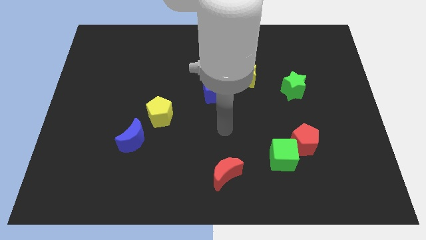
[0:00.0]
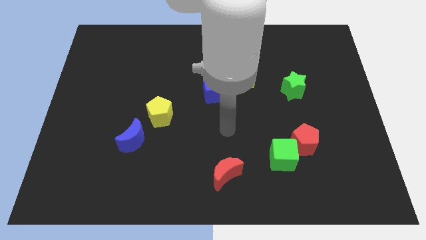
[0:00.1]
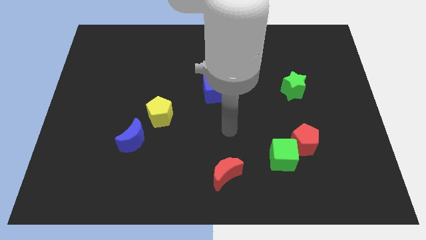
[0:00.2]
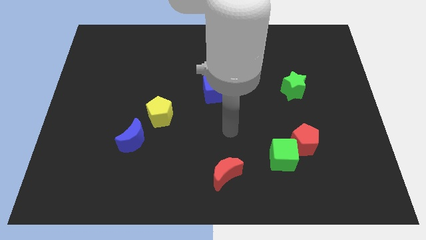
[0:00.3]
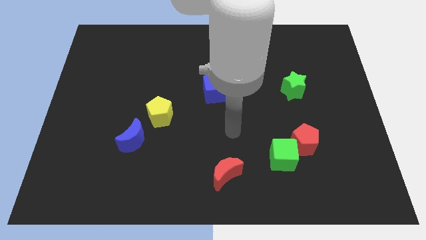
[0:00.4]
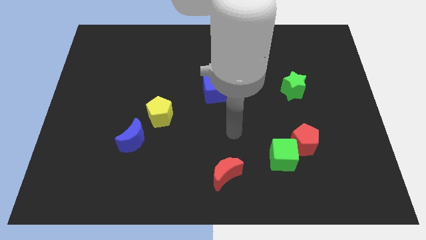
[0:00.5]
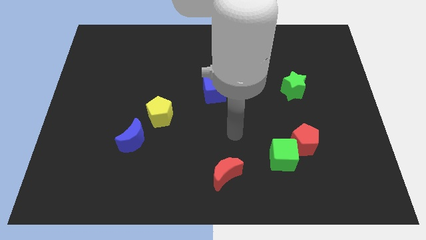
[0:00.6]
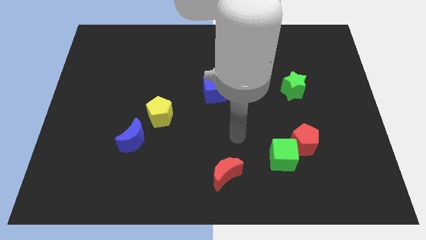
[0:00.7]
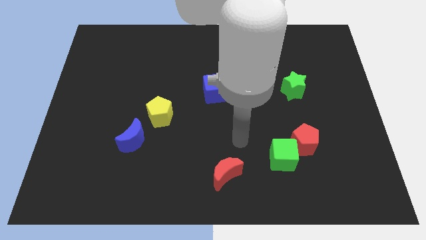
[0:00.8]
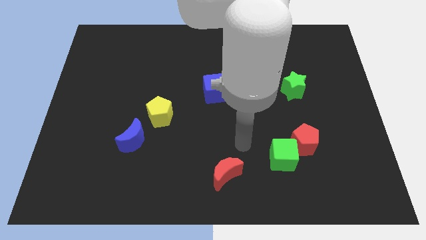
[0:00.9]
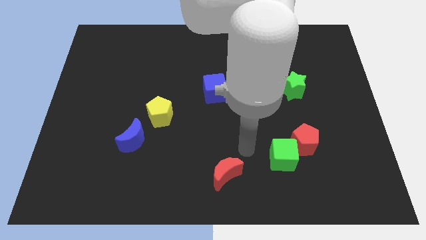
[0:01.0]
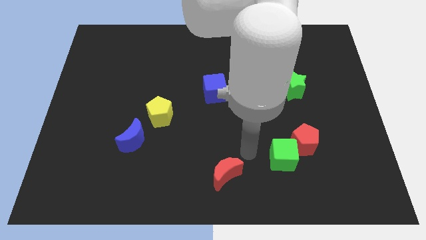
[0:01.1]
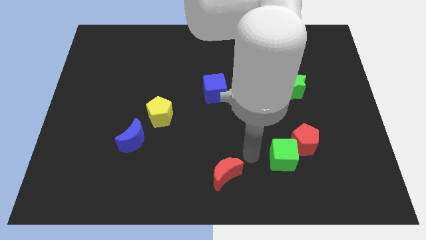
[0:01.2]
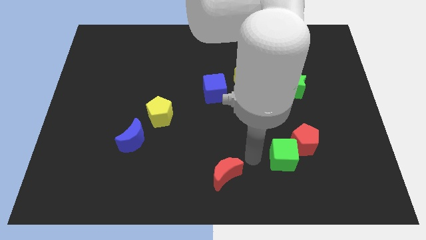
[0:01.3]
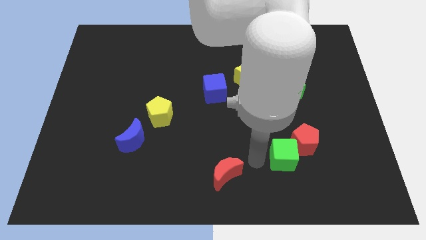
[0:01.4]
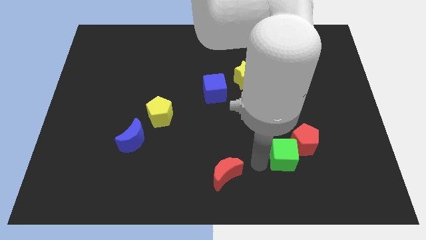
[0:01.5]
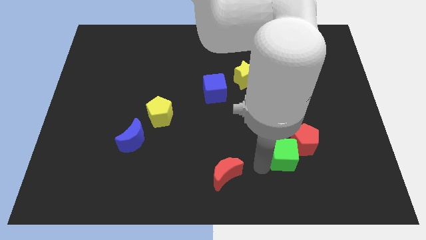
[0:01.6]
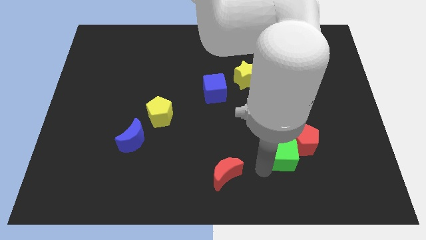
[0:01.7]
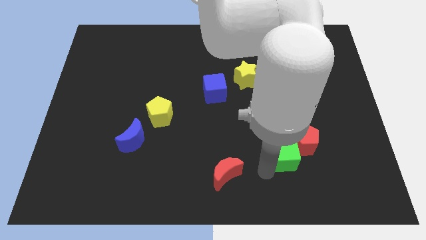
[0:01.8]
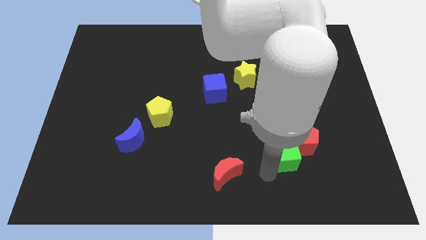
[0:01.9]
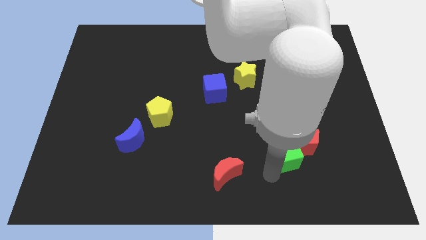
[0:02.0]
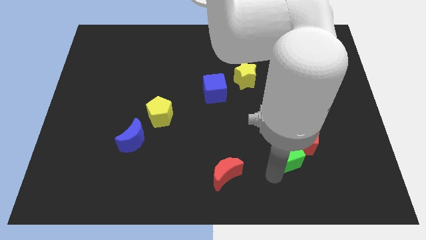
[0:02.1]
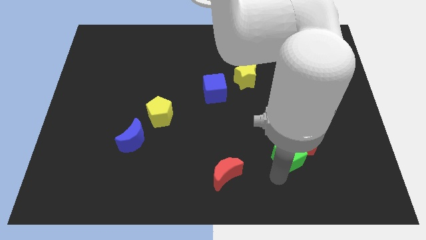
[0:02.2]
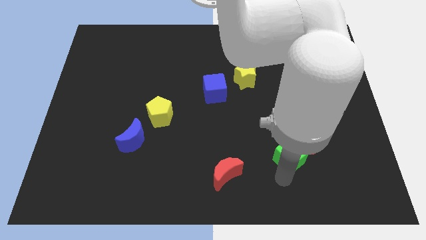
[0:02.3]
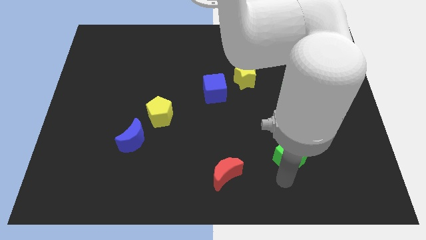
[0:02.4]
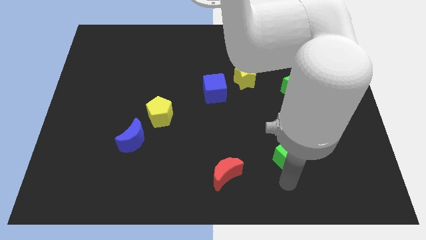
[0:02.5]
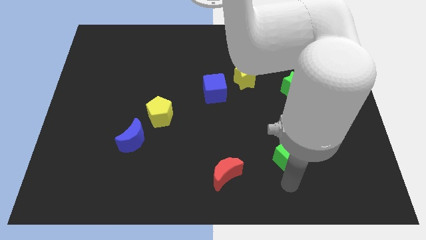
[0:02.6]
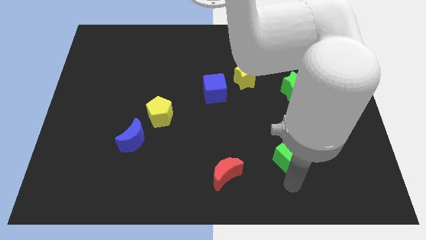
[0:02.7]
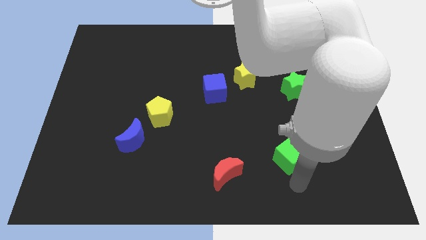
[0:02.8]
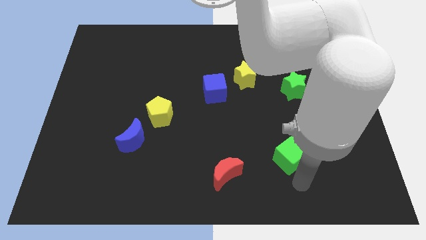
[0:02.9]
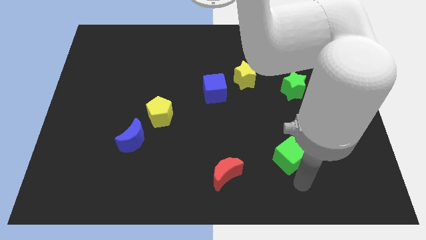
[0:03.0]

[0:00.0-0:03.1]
slide green cube slightly to the right

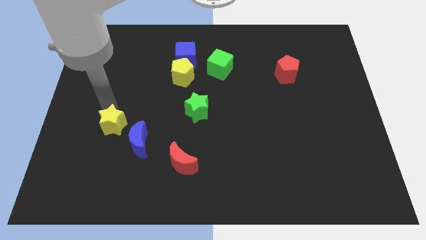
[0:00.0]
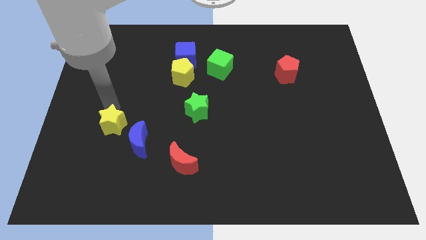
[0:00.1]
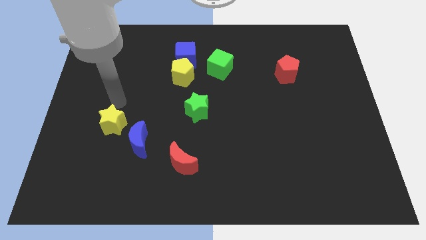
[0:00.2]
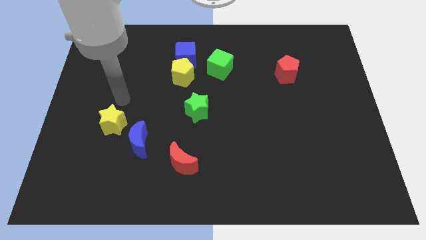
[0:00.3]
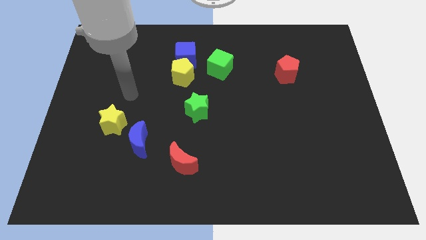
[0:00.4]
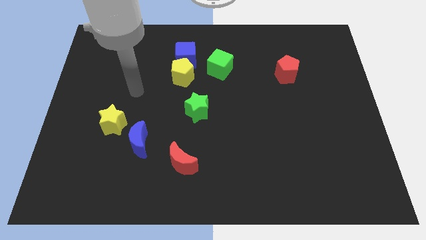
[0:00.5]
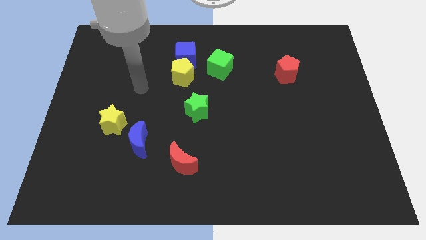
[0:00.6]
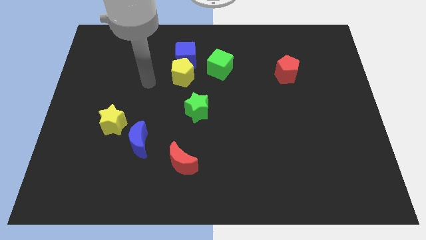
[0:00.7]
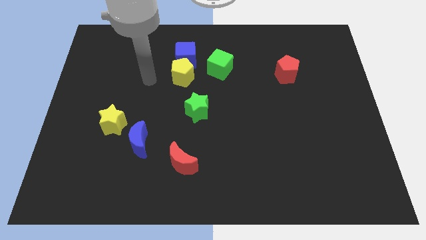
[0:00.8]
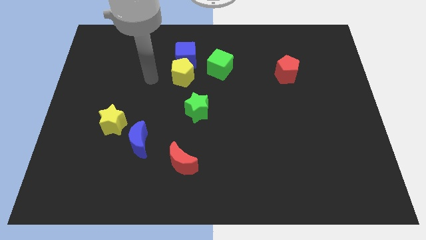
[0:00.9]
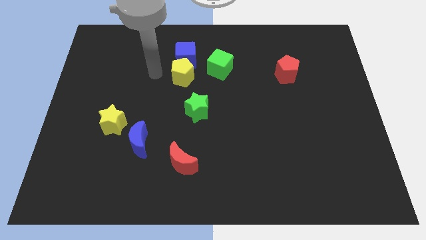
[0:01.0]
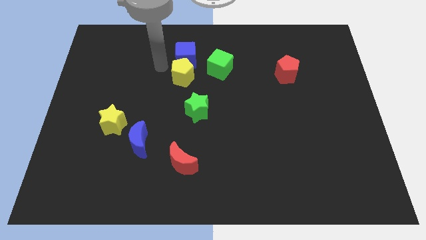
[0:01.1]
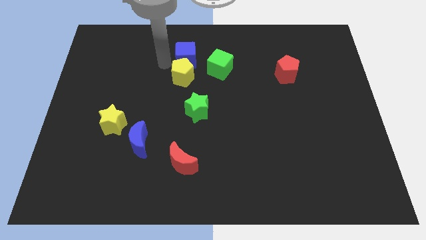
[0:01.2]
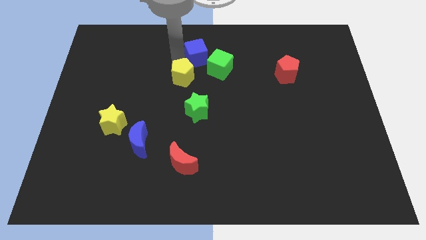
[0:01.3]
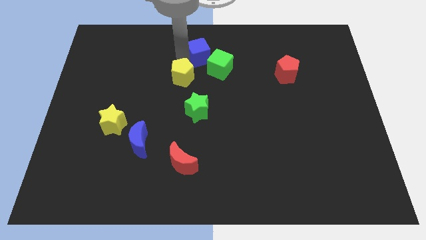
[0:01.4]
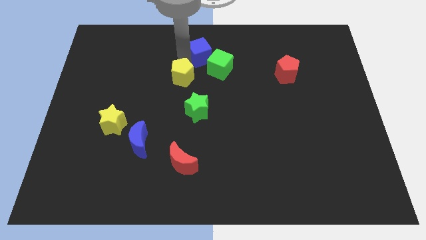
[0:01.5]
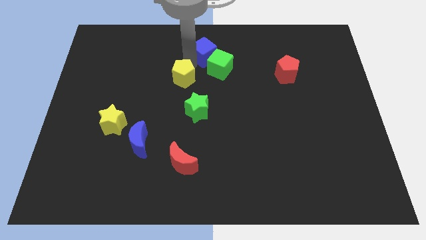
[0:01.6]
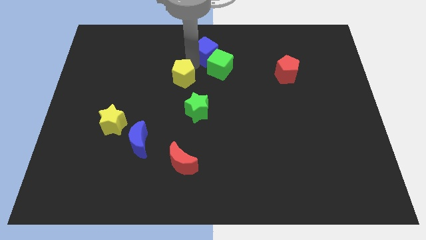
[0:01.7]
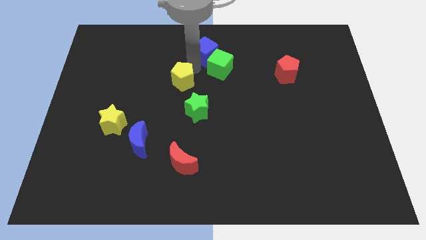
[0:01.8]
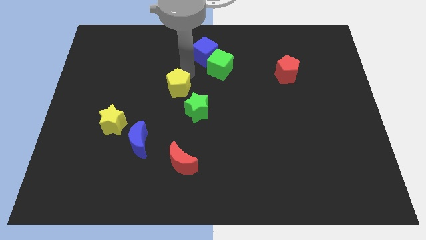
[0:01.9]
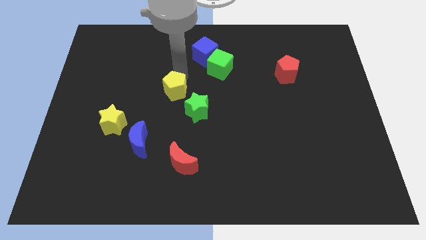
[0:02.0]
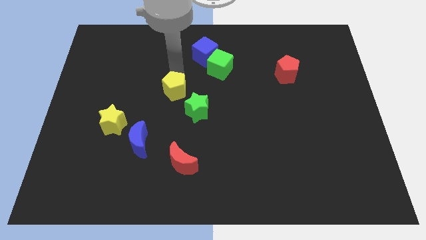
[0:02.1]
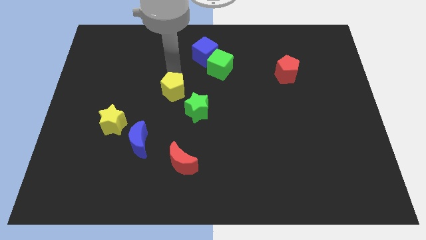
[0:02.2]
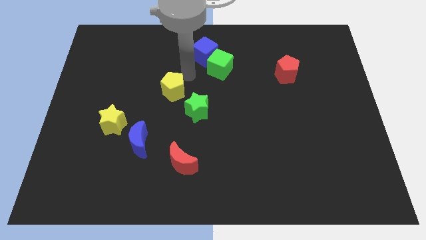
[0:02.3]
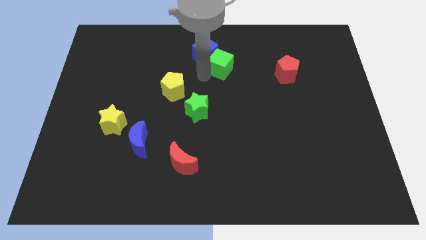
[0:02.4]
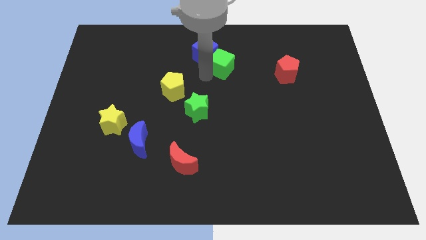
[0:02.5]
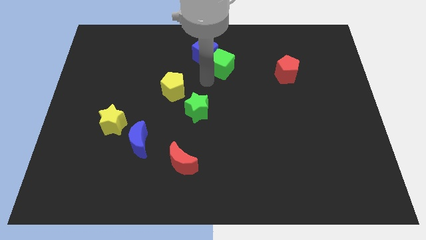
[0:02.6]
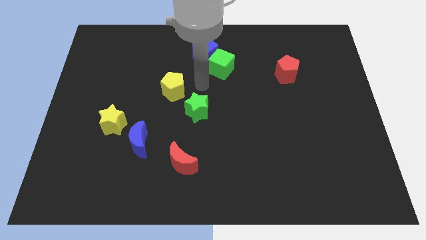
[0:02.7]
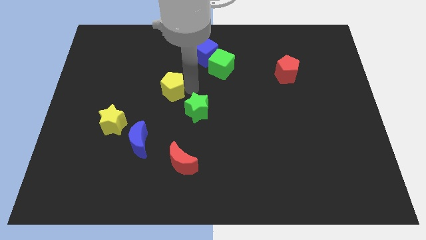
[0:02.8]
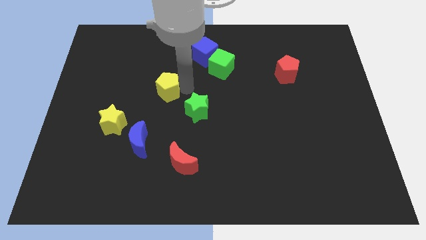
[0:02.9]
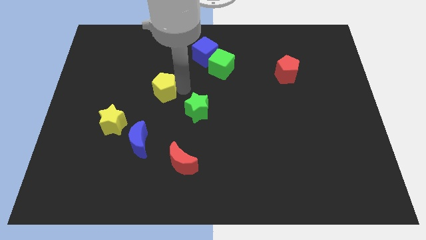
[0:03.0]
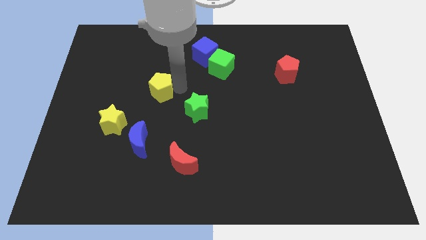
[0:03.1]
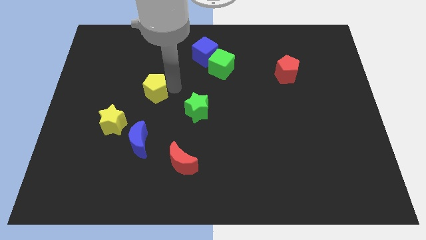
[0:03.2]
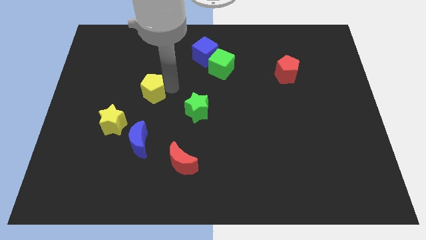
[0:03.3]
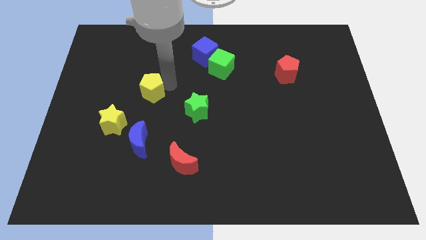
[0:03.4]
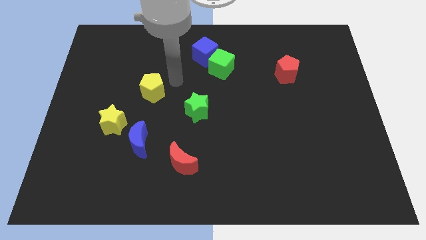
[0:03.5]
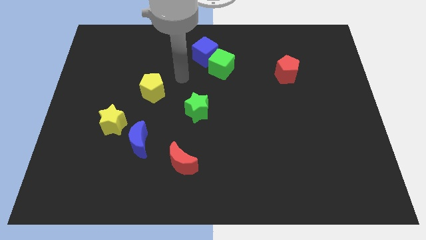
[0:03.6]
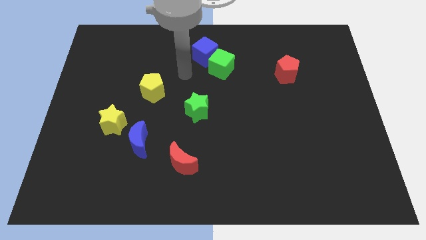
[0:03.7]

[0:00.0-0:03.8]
separate the yellow pentagon from the blue cube

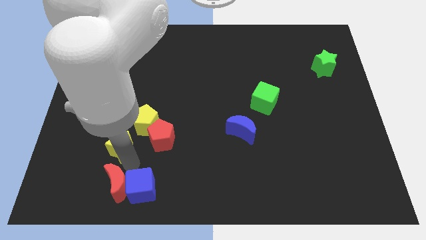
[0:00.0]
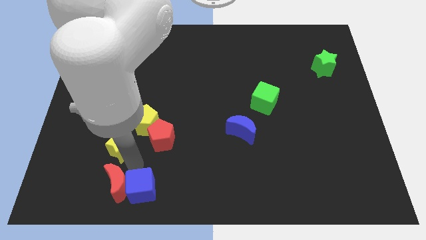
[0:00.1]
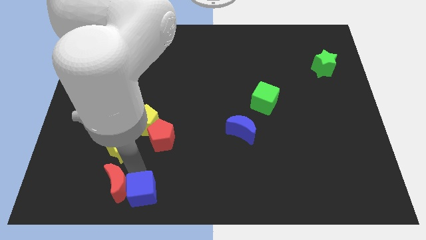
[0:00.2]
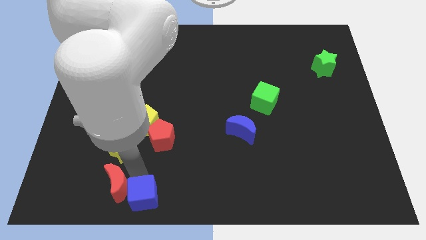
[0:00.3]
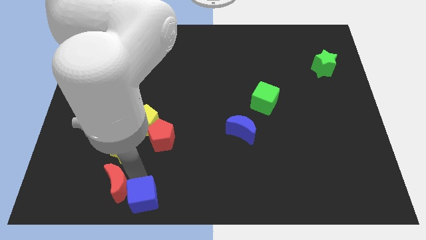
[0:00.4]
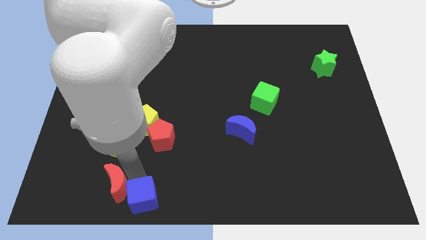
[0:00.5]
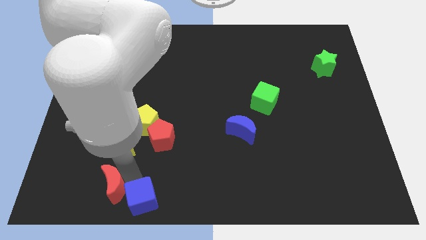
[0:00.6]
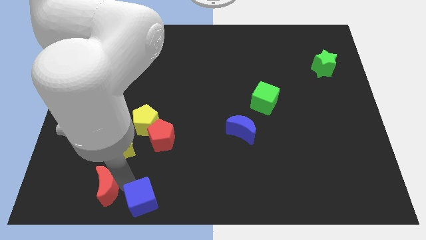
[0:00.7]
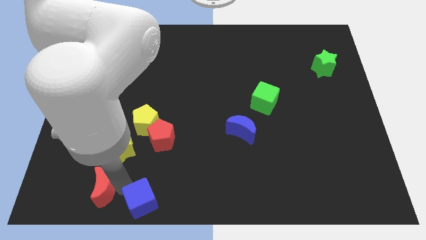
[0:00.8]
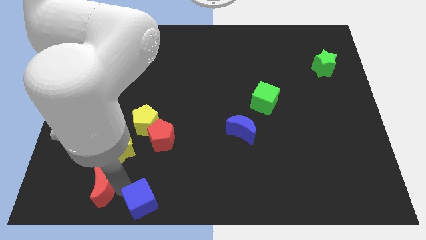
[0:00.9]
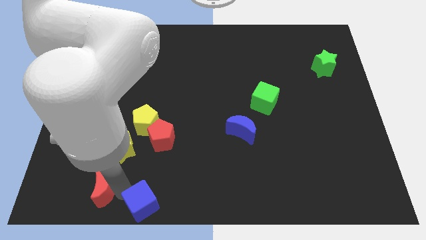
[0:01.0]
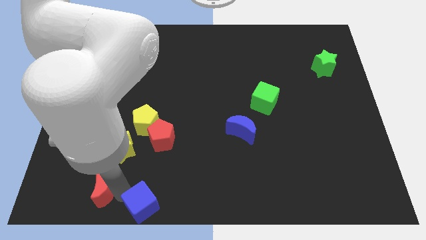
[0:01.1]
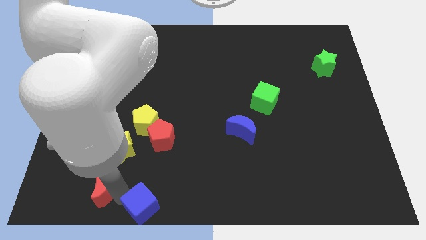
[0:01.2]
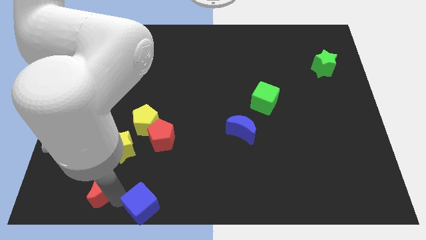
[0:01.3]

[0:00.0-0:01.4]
move the blue cube close to the bottom center

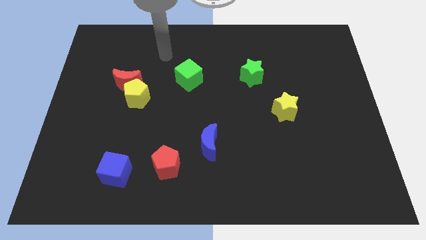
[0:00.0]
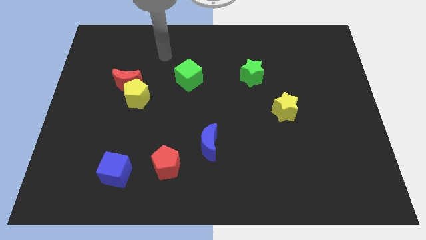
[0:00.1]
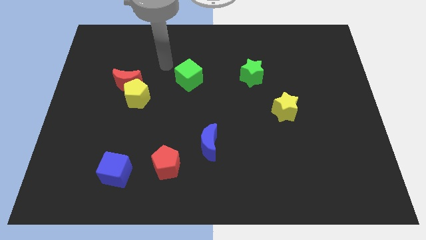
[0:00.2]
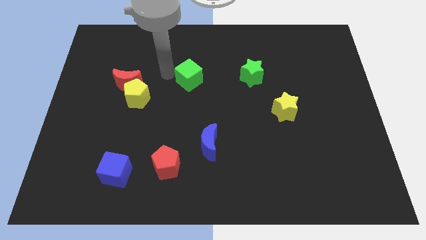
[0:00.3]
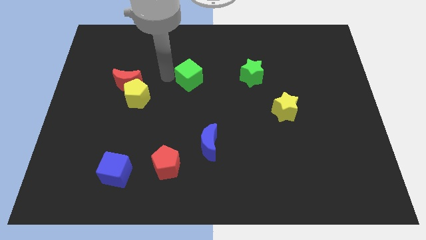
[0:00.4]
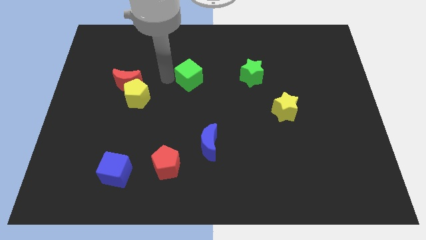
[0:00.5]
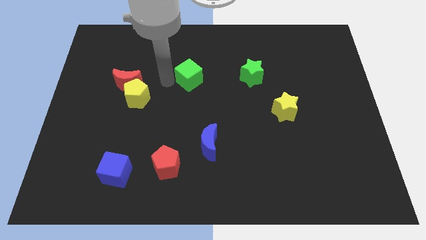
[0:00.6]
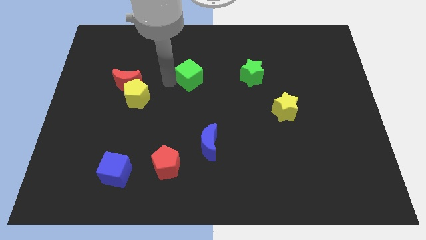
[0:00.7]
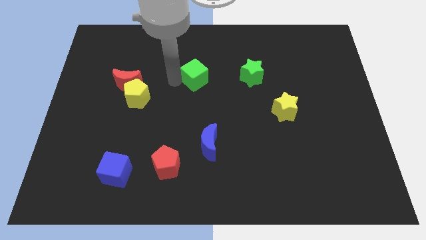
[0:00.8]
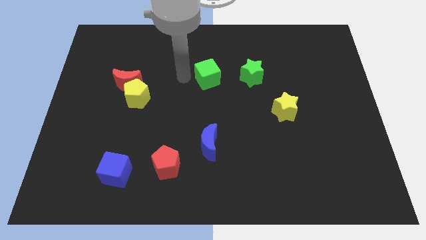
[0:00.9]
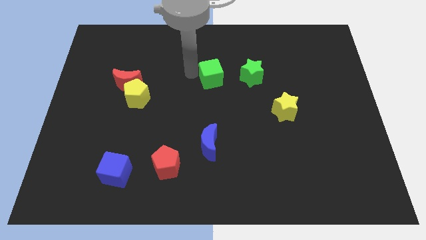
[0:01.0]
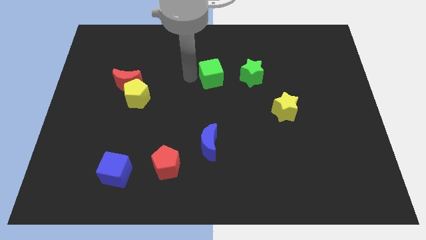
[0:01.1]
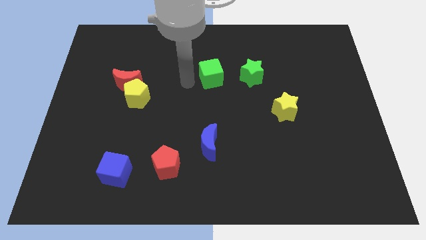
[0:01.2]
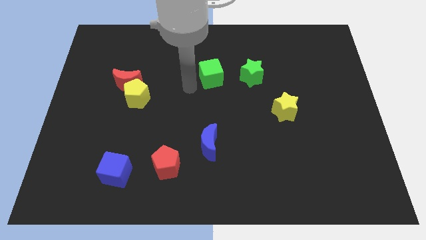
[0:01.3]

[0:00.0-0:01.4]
move the green cube slightly to the right
